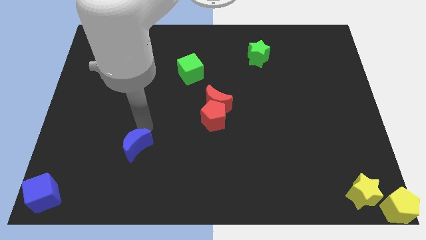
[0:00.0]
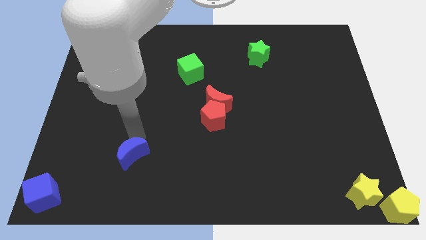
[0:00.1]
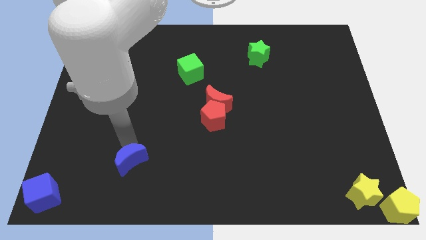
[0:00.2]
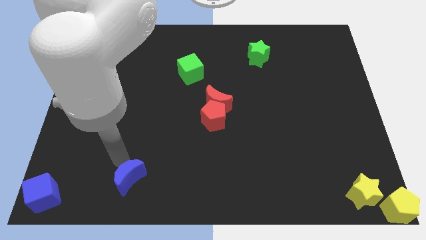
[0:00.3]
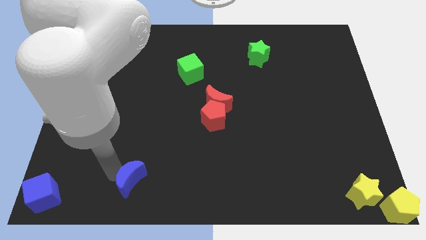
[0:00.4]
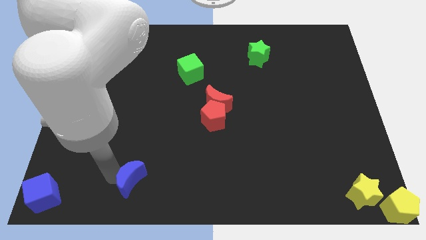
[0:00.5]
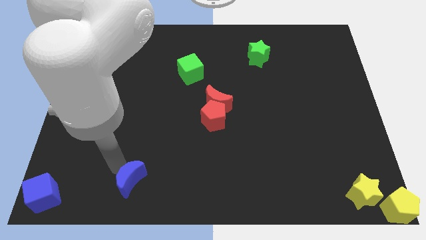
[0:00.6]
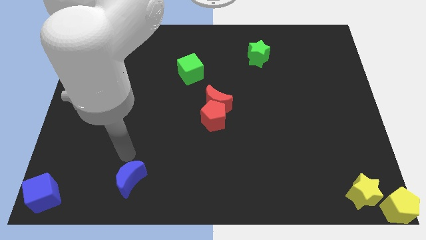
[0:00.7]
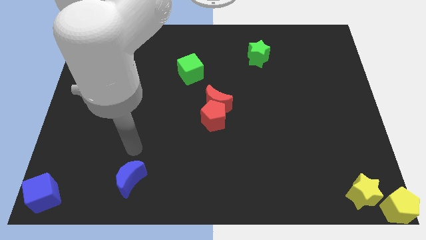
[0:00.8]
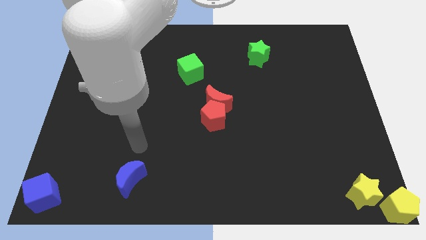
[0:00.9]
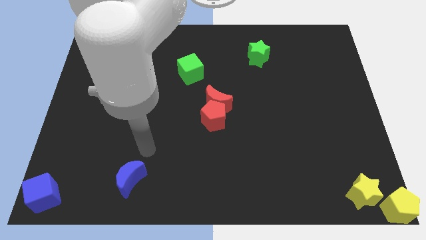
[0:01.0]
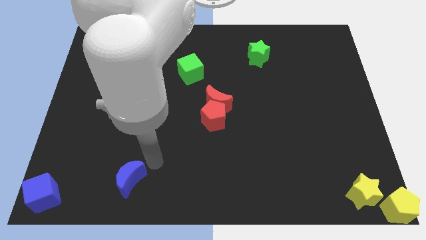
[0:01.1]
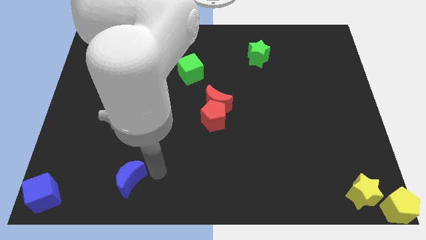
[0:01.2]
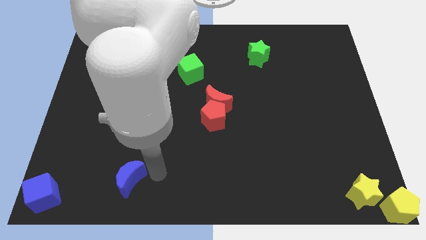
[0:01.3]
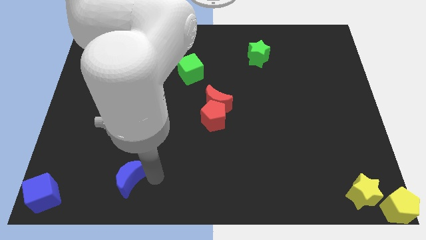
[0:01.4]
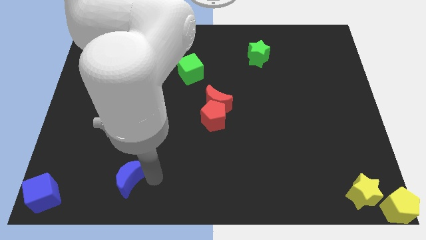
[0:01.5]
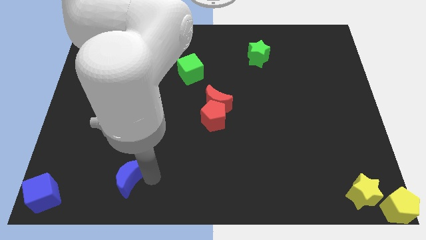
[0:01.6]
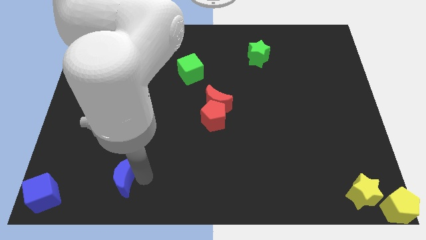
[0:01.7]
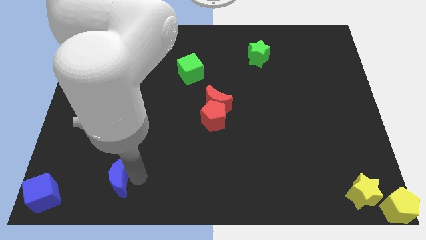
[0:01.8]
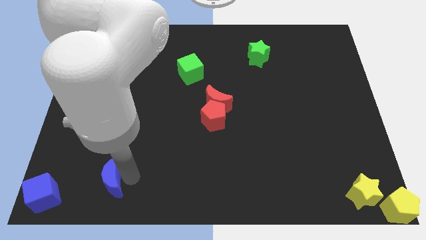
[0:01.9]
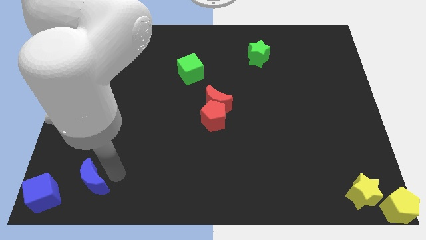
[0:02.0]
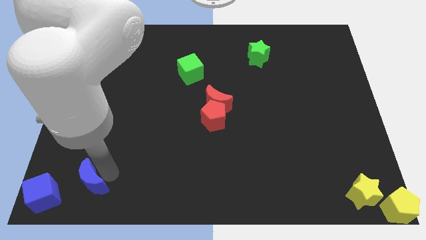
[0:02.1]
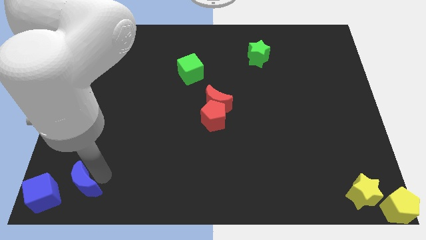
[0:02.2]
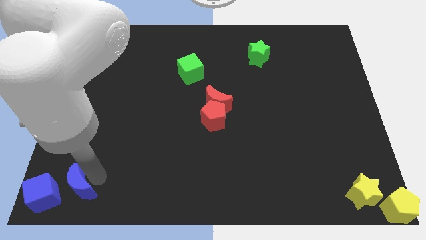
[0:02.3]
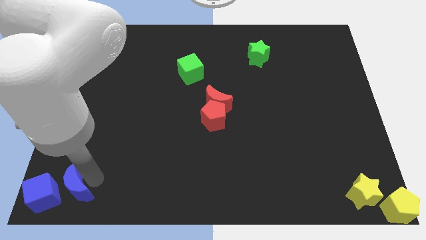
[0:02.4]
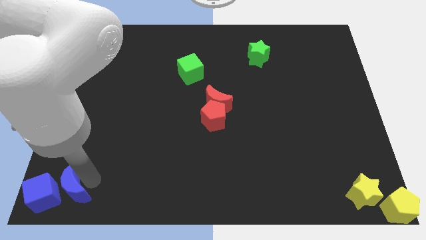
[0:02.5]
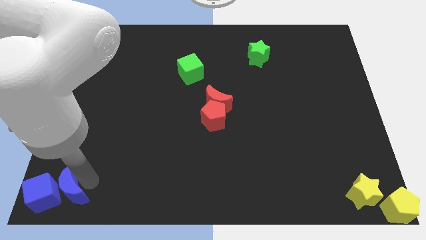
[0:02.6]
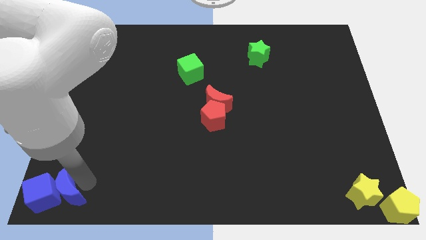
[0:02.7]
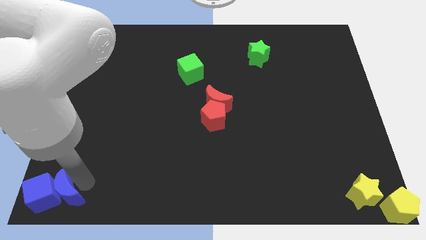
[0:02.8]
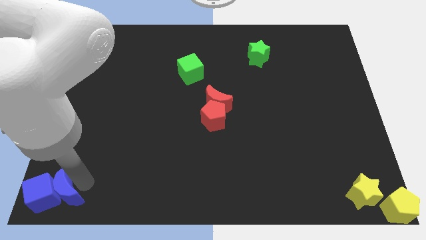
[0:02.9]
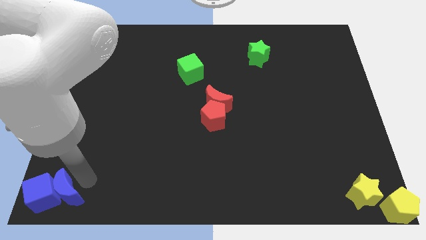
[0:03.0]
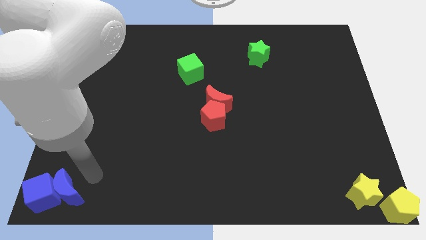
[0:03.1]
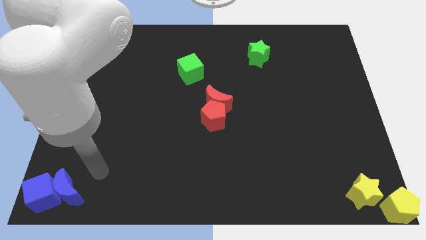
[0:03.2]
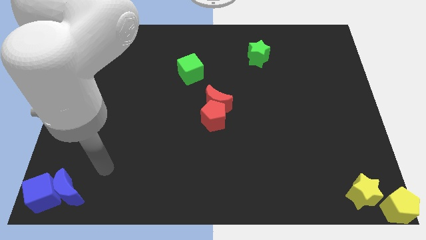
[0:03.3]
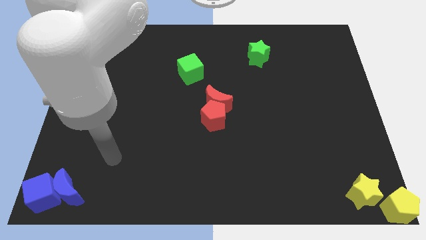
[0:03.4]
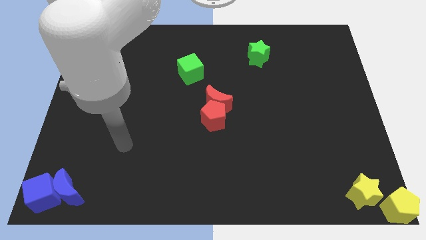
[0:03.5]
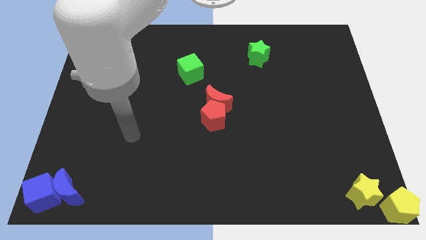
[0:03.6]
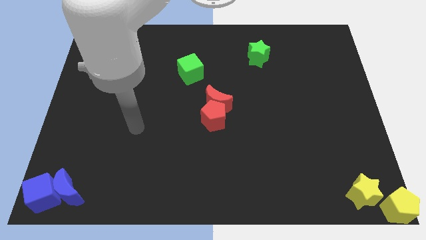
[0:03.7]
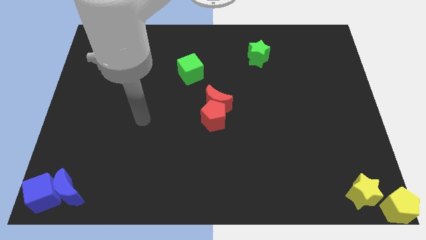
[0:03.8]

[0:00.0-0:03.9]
move the blue moon into the blue cube

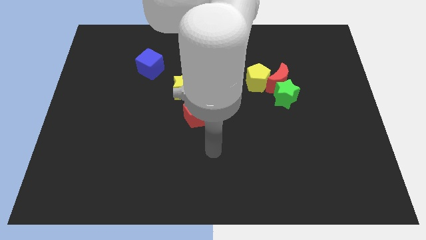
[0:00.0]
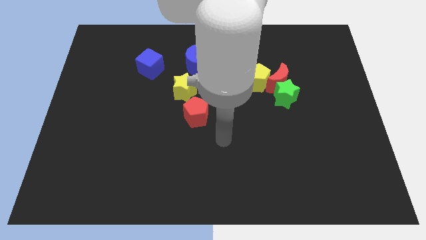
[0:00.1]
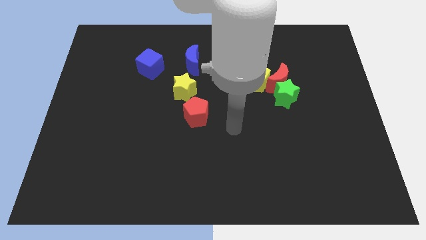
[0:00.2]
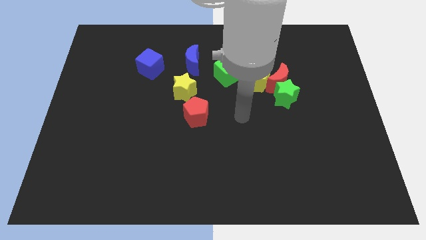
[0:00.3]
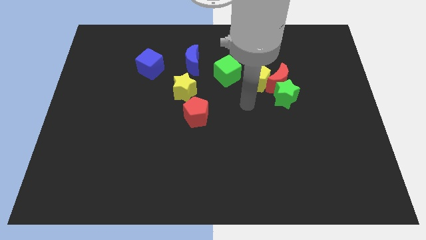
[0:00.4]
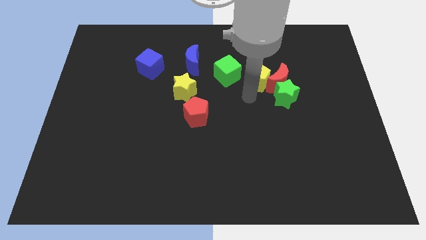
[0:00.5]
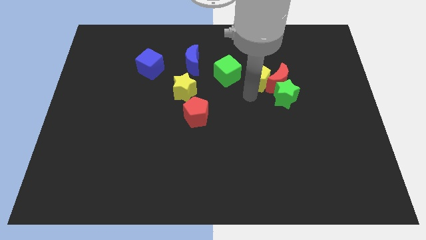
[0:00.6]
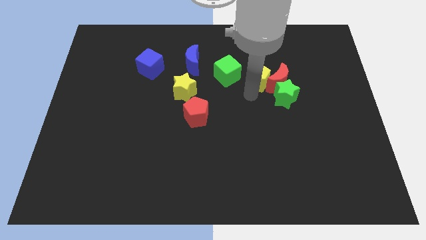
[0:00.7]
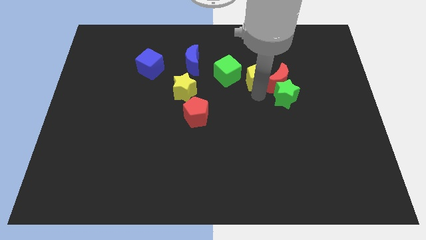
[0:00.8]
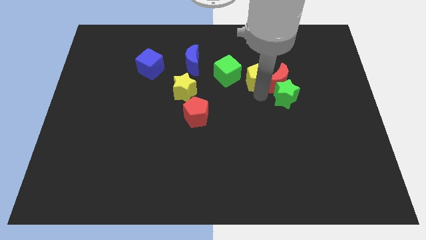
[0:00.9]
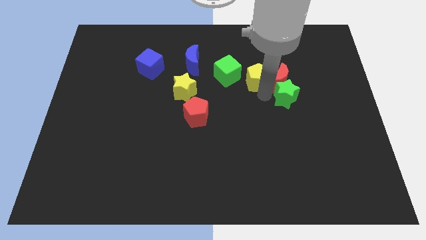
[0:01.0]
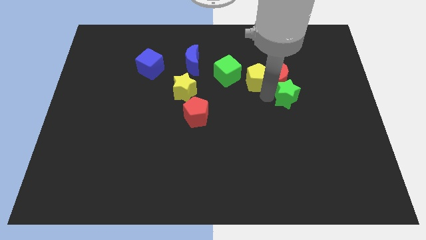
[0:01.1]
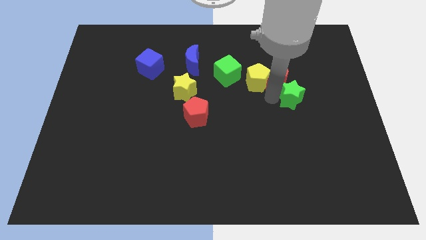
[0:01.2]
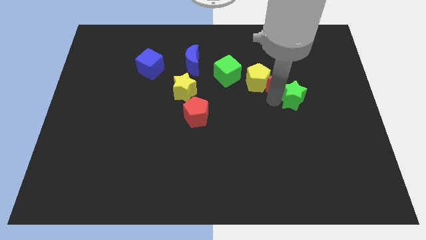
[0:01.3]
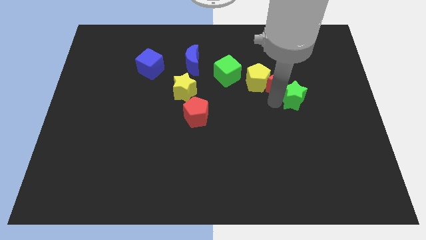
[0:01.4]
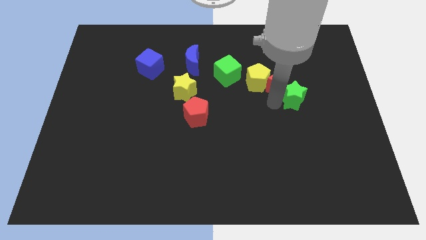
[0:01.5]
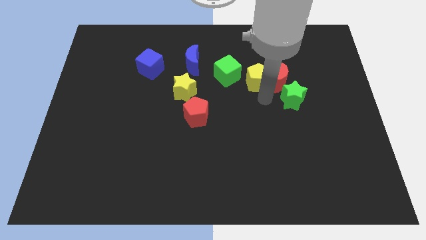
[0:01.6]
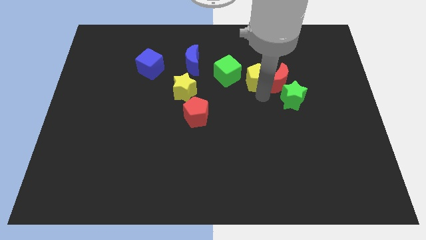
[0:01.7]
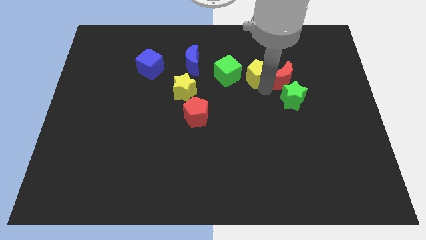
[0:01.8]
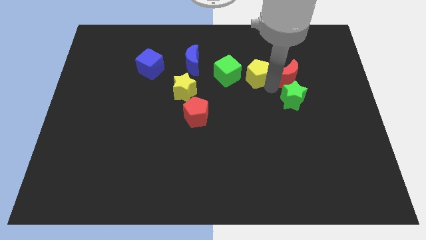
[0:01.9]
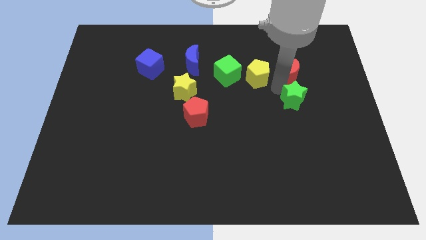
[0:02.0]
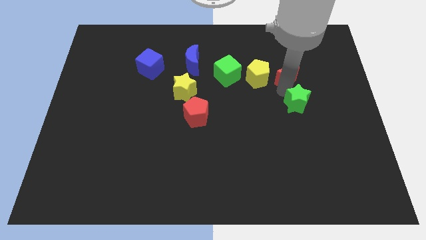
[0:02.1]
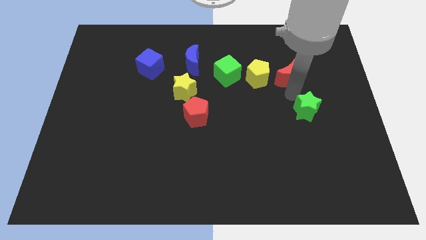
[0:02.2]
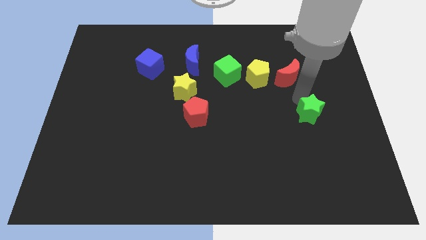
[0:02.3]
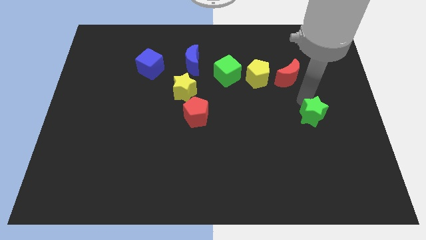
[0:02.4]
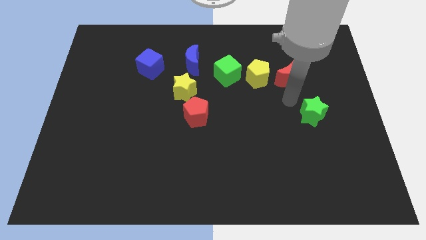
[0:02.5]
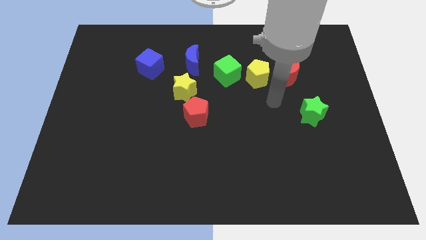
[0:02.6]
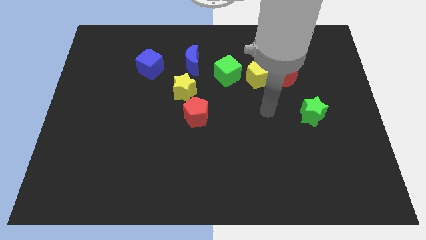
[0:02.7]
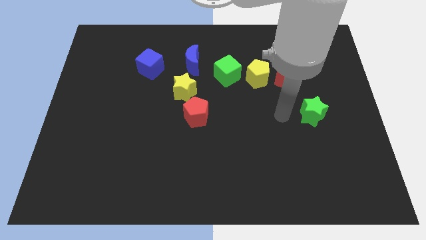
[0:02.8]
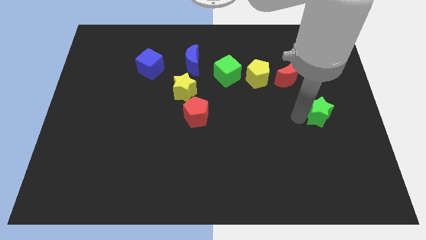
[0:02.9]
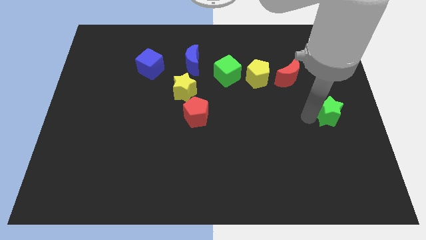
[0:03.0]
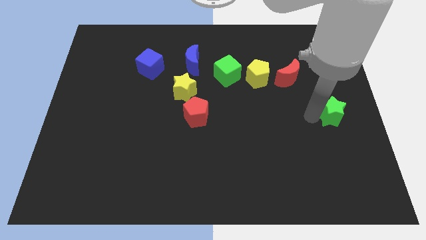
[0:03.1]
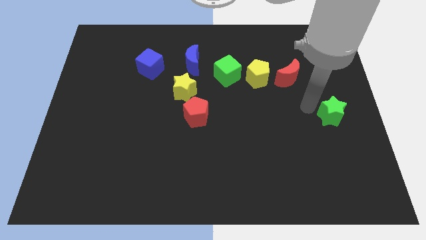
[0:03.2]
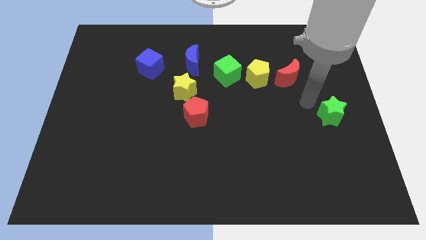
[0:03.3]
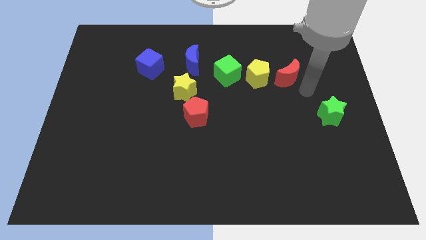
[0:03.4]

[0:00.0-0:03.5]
move green star towards right centre of the board

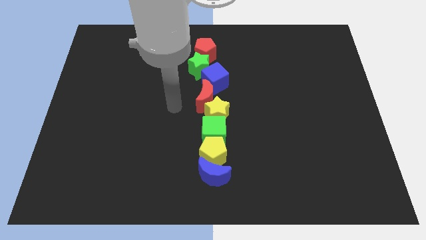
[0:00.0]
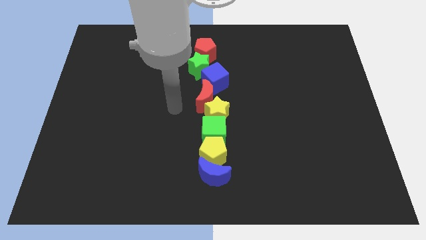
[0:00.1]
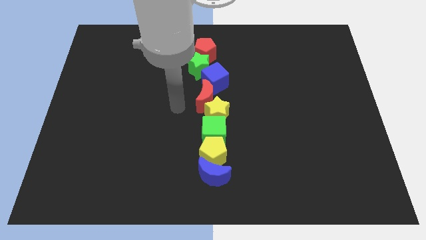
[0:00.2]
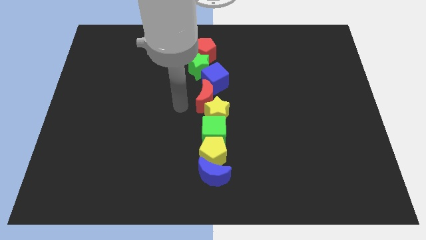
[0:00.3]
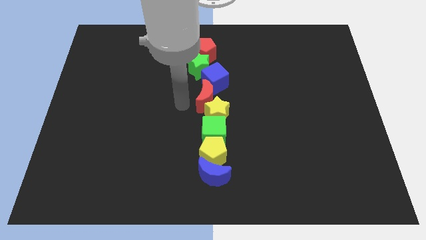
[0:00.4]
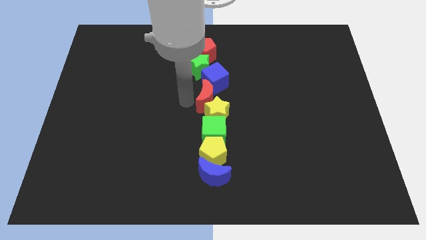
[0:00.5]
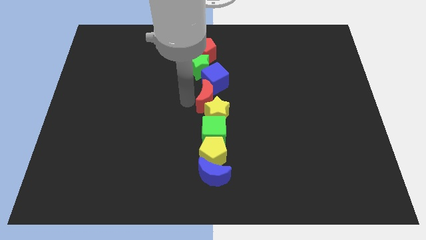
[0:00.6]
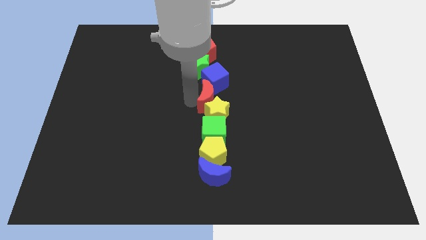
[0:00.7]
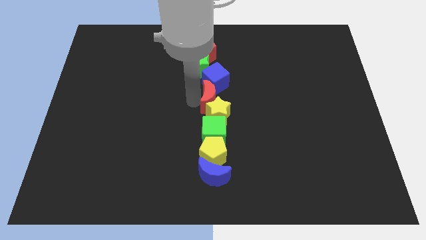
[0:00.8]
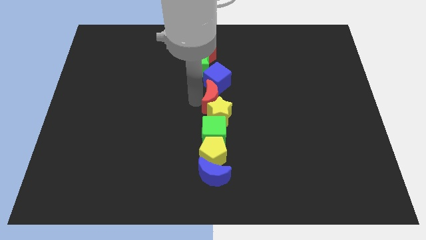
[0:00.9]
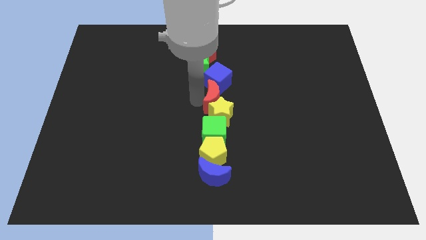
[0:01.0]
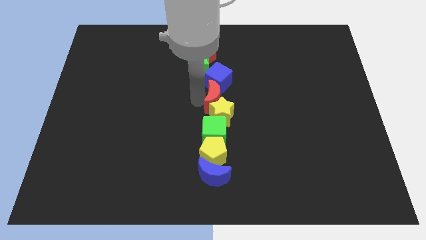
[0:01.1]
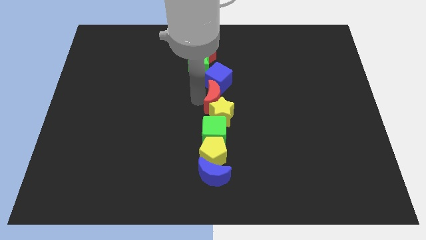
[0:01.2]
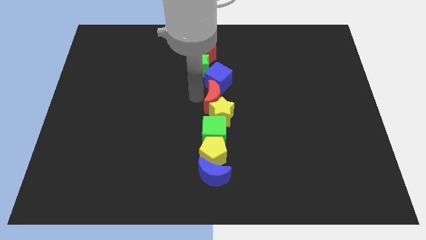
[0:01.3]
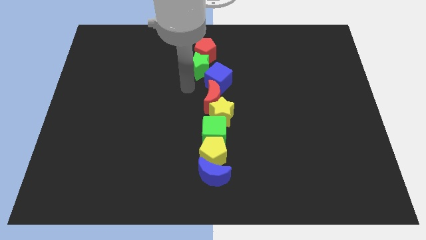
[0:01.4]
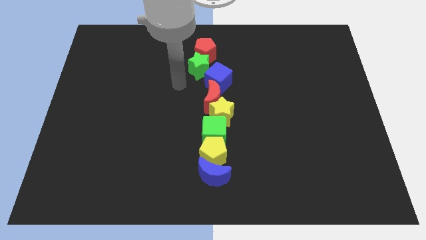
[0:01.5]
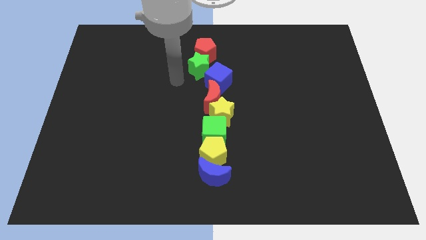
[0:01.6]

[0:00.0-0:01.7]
move the red moon slightly to the right
